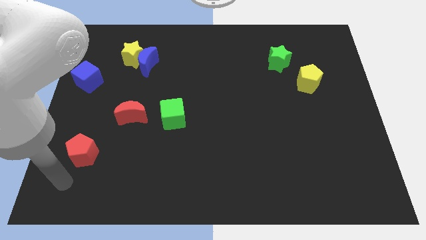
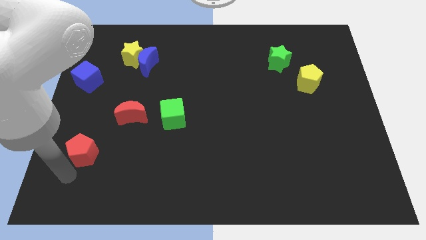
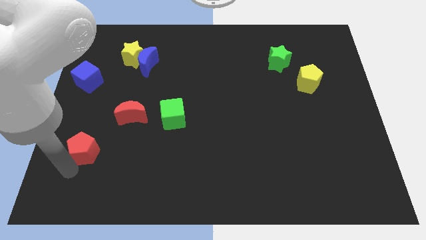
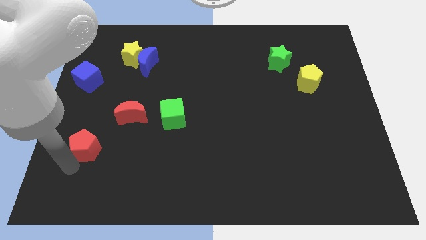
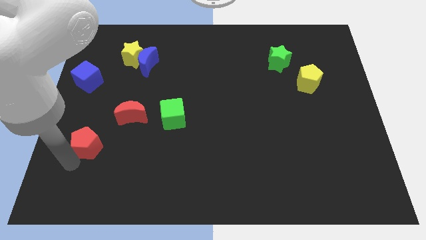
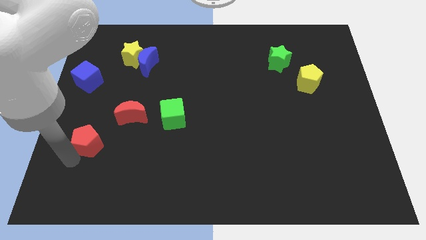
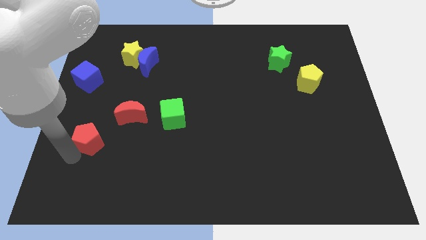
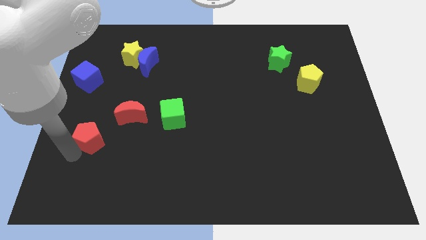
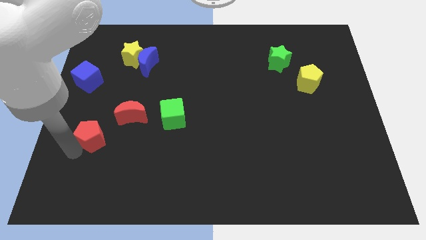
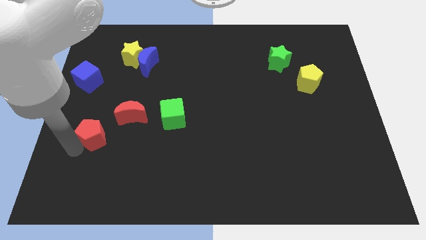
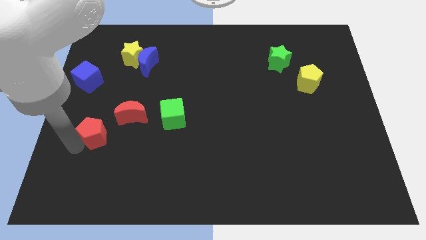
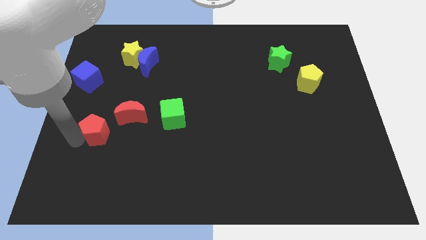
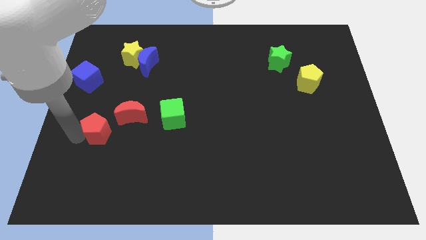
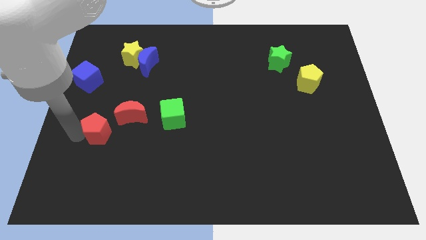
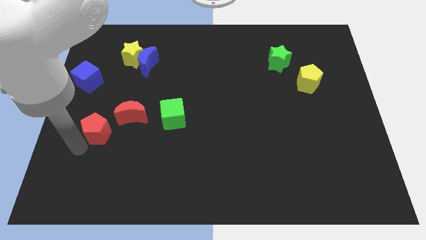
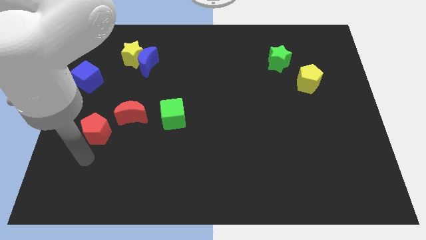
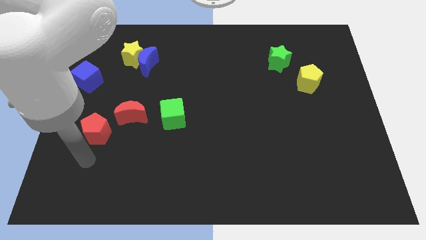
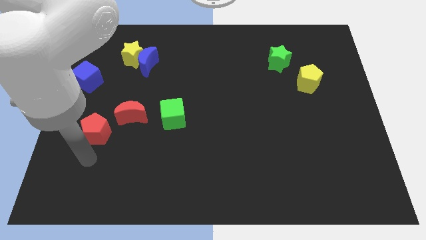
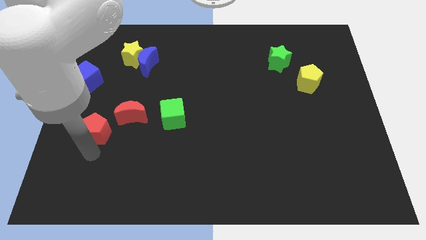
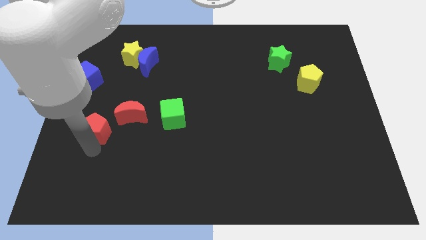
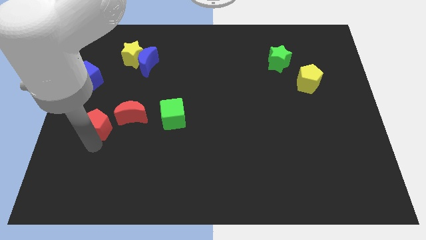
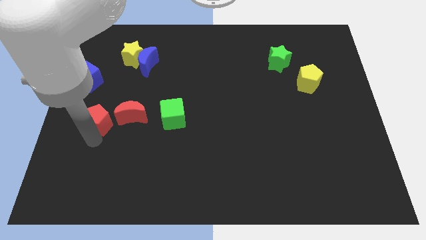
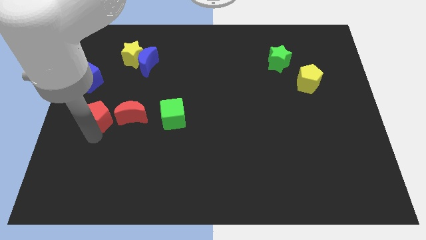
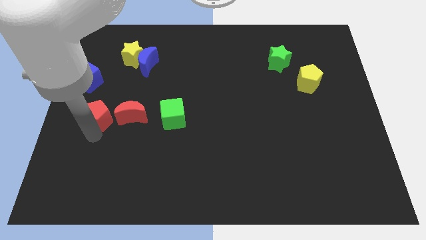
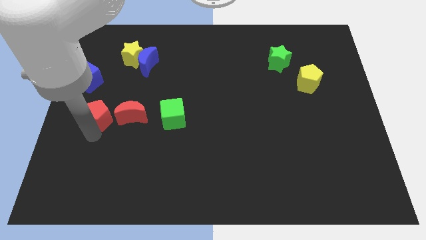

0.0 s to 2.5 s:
push red pentagon beside red crescent

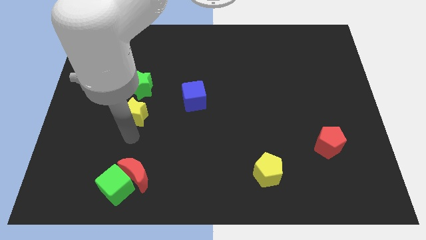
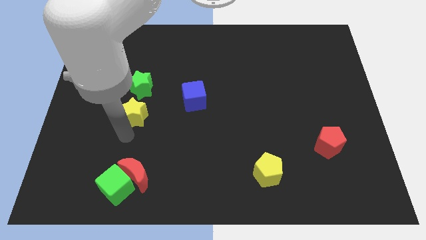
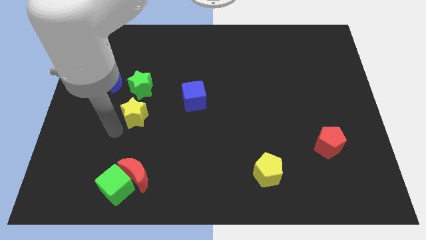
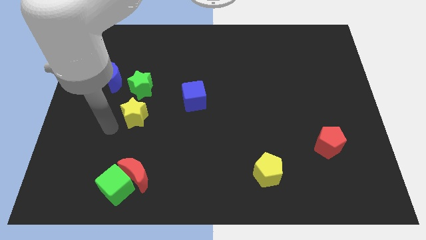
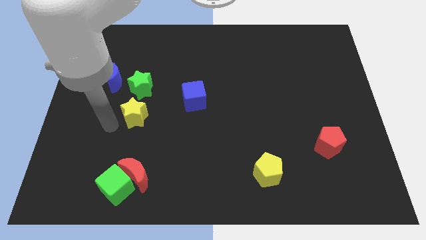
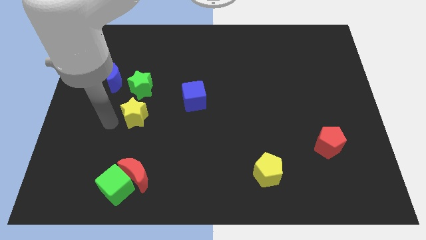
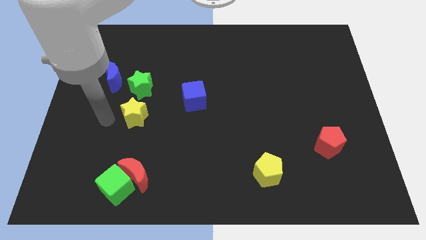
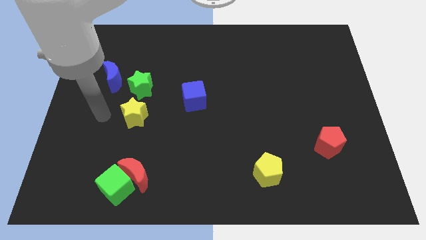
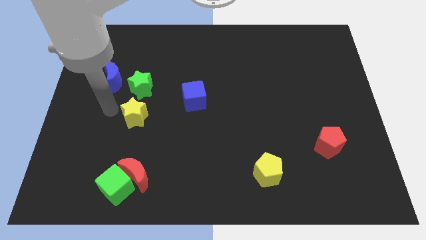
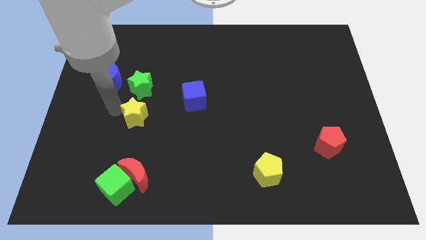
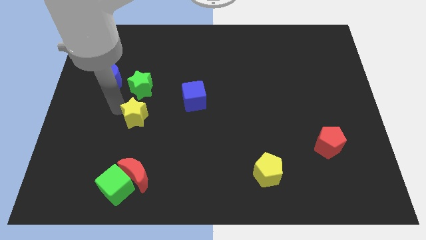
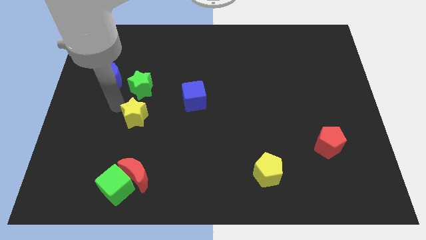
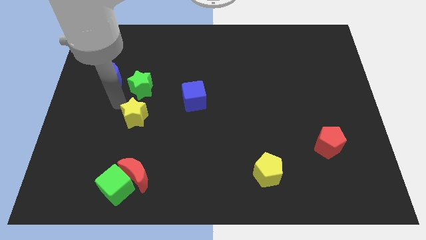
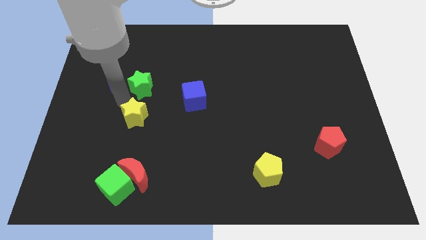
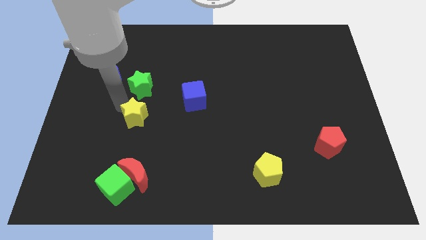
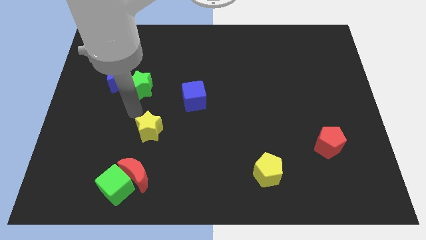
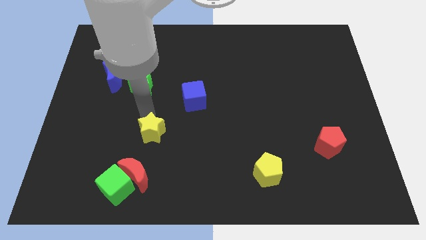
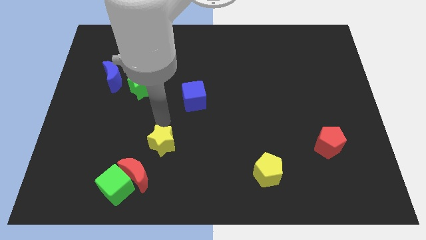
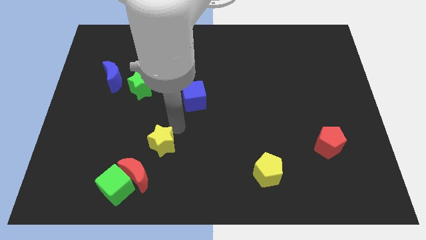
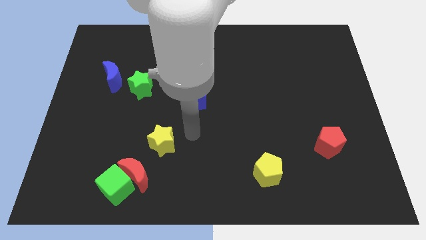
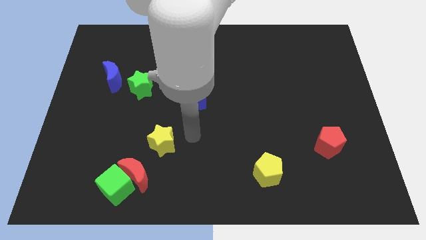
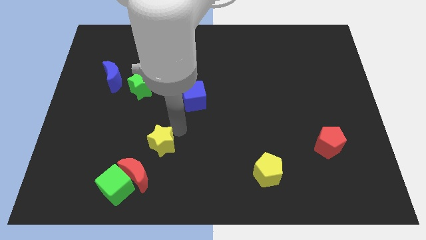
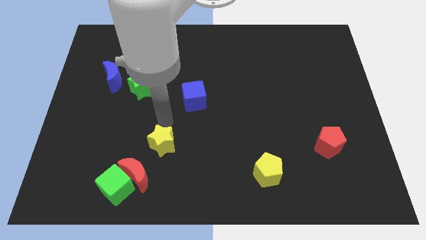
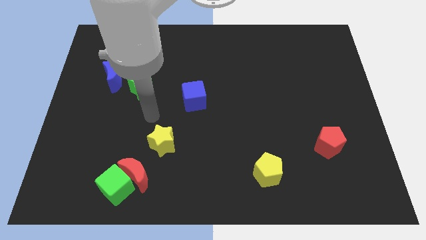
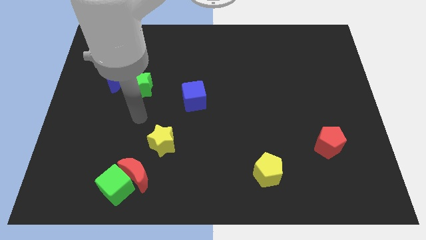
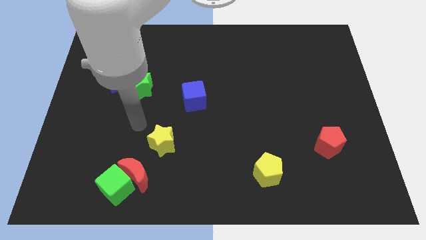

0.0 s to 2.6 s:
push yellow star diagonally to blue cube

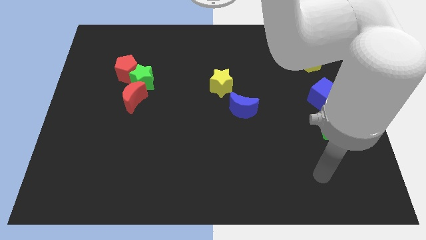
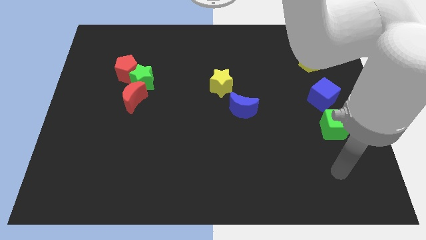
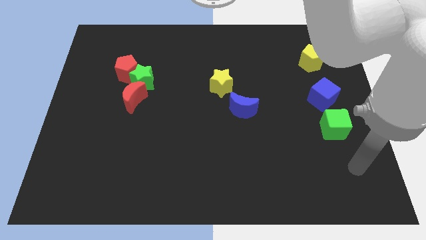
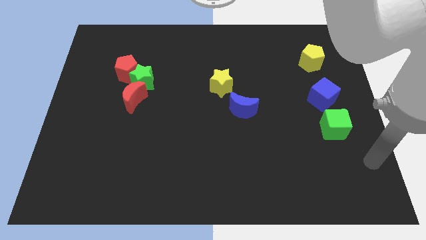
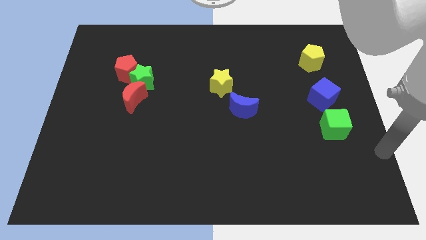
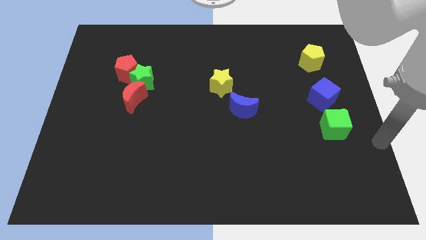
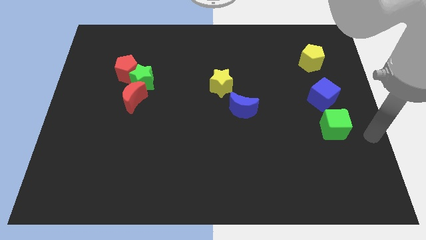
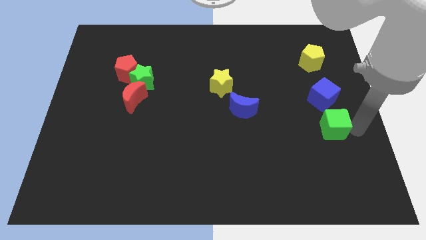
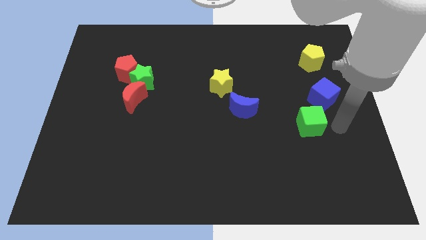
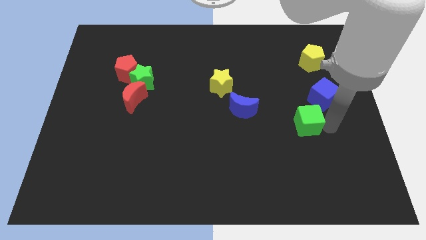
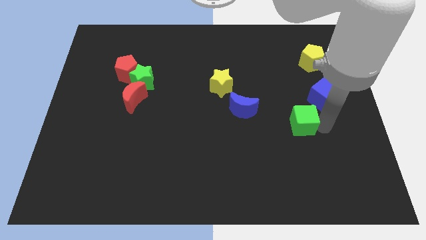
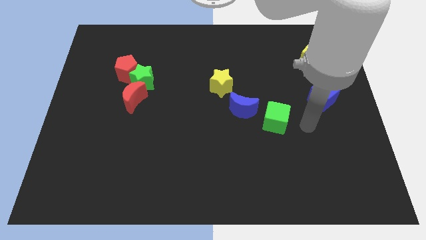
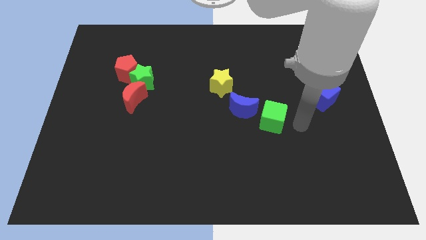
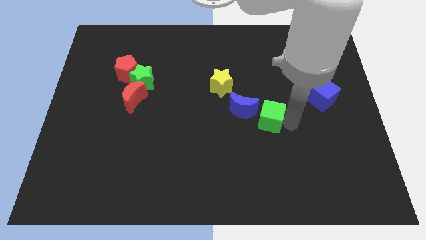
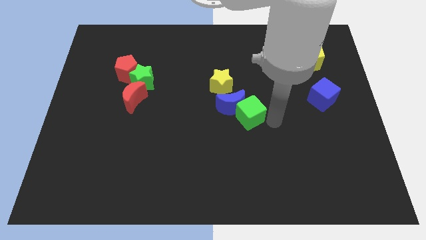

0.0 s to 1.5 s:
push the green cube to the right side of the blue moon

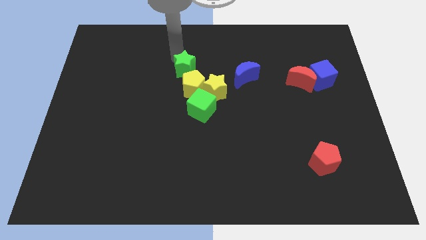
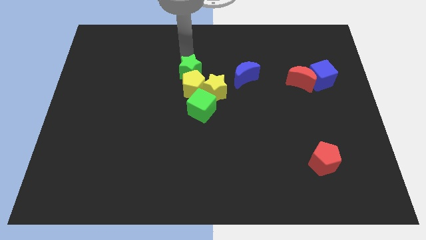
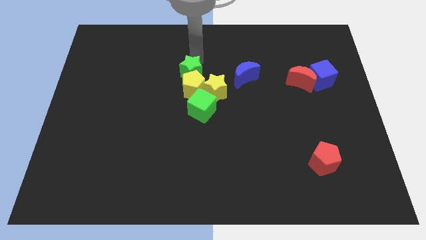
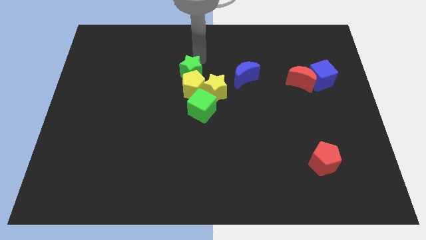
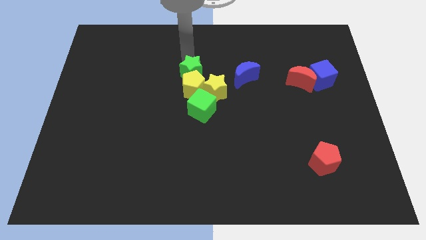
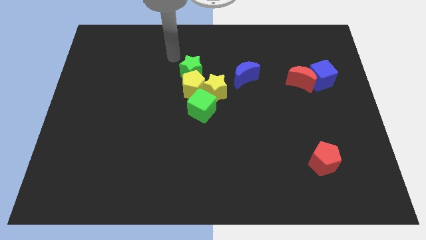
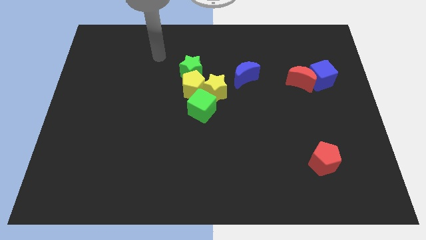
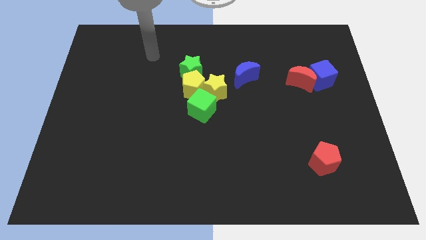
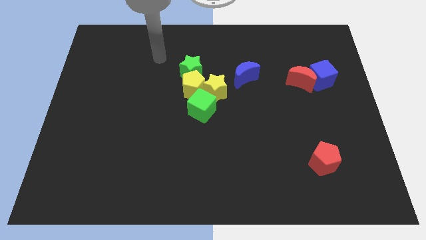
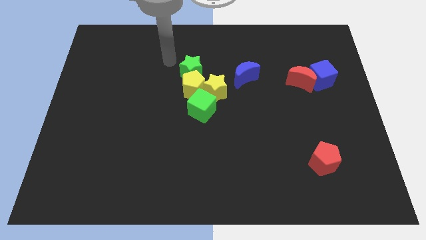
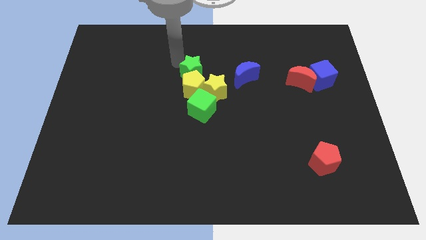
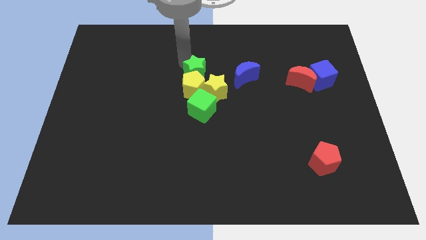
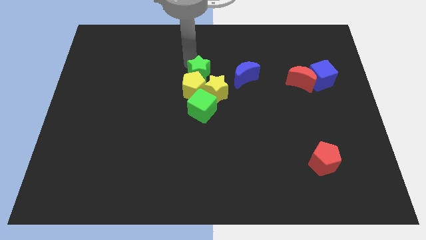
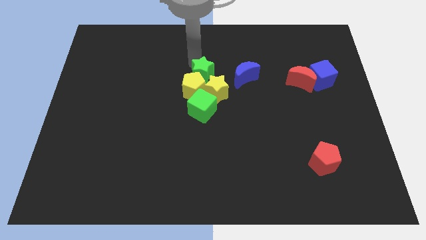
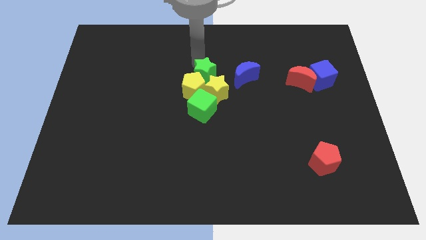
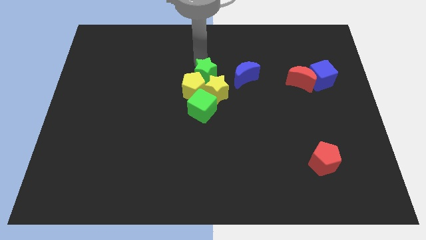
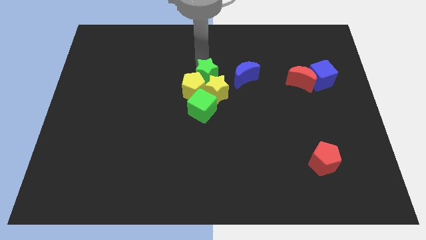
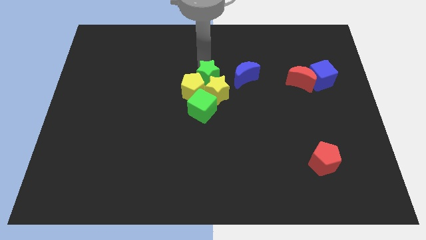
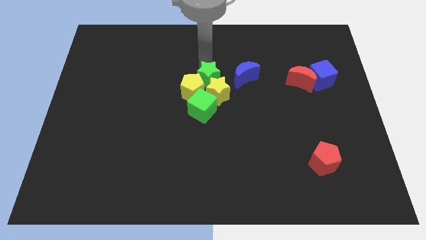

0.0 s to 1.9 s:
group up the green star with the yellow blocks and green cube at the center of the board

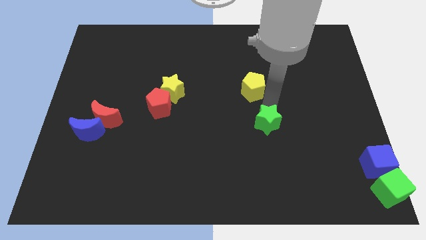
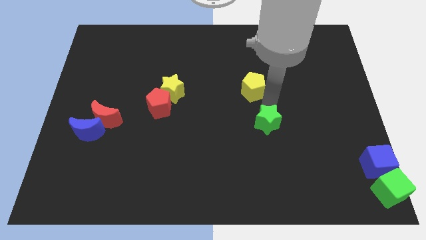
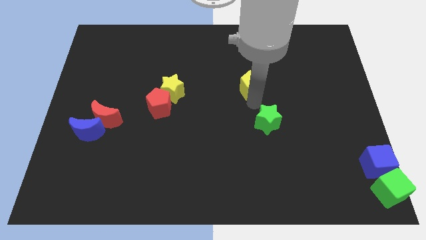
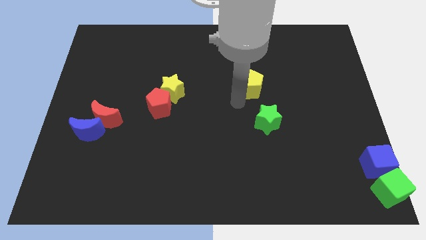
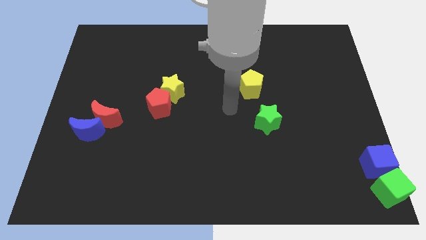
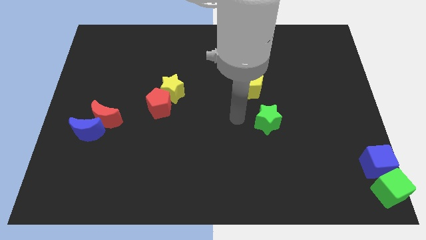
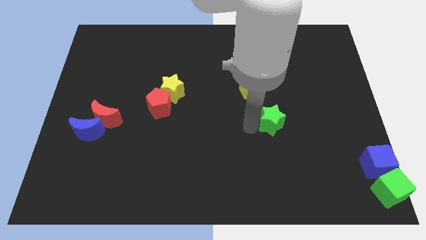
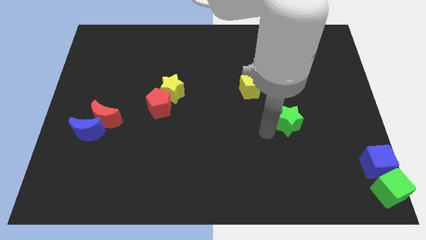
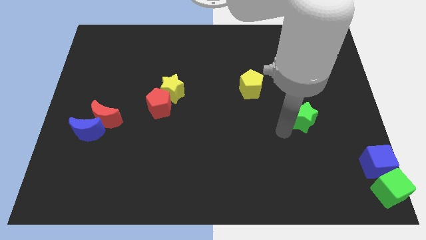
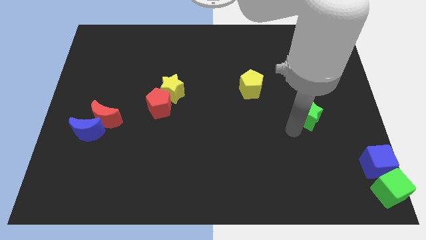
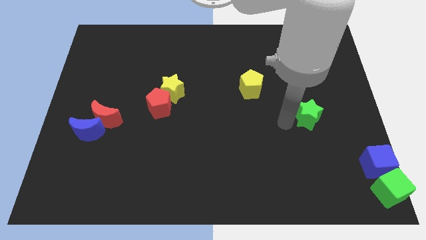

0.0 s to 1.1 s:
push green star slightly towards its right
